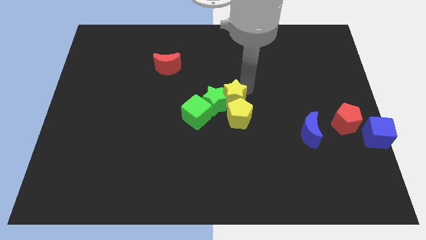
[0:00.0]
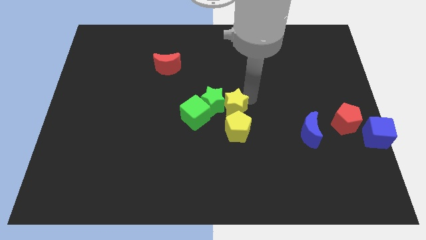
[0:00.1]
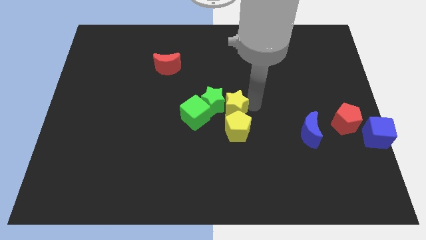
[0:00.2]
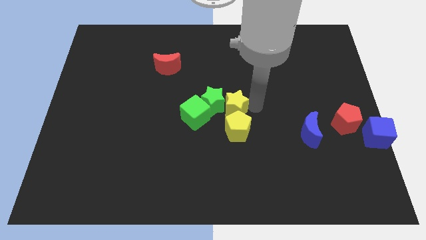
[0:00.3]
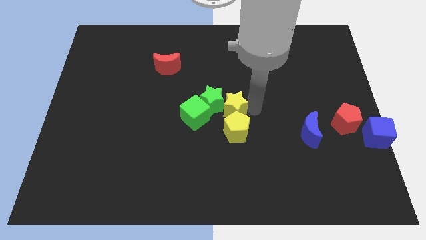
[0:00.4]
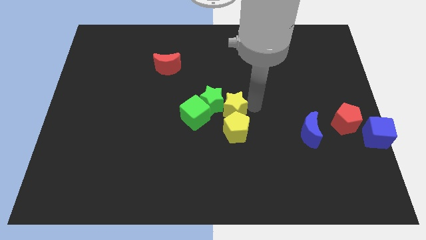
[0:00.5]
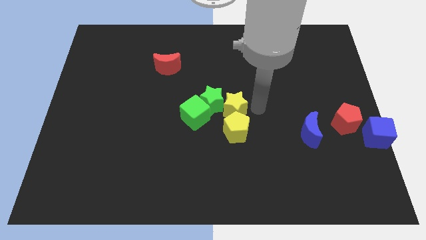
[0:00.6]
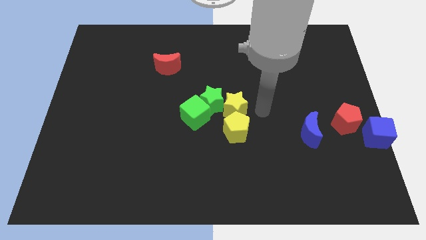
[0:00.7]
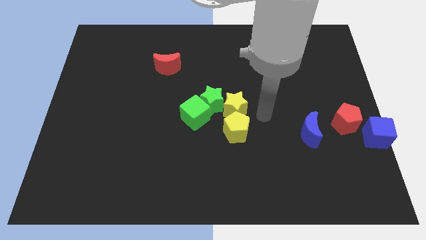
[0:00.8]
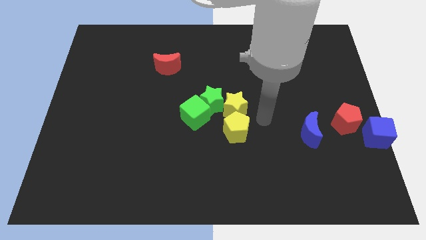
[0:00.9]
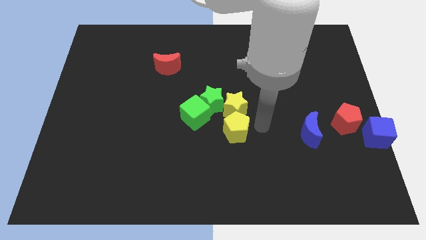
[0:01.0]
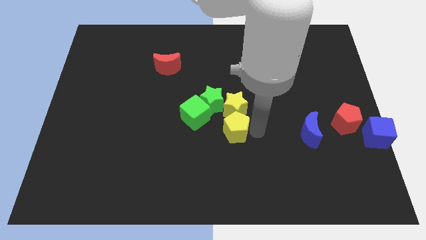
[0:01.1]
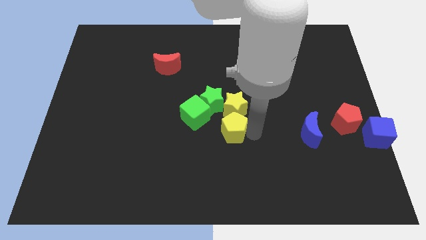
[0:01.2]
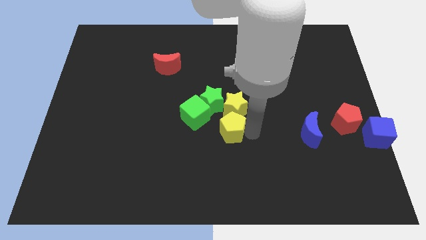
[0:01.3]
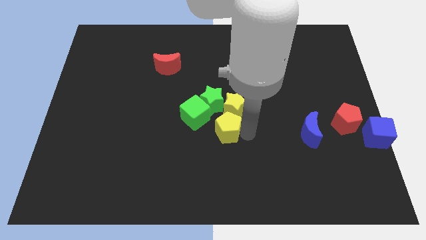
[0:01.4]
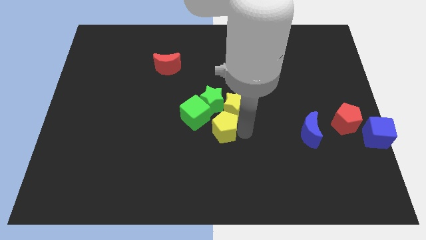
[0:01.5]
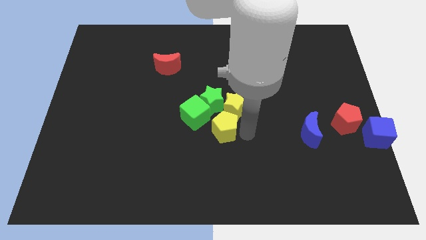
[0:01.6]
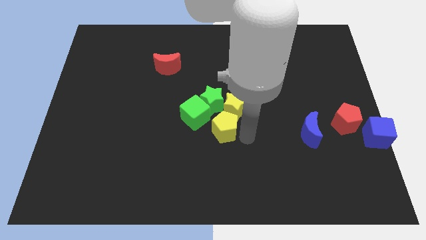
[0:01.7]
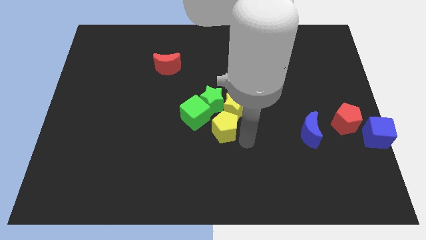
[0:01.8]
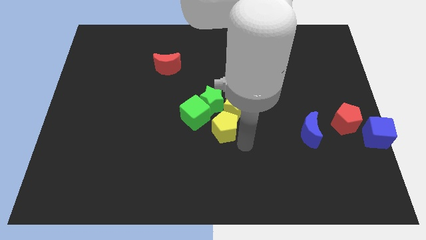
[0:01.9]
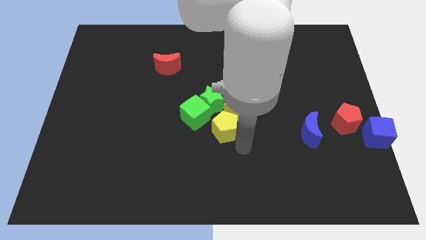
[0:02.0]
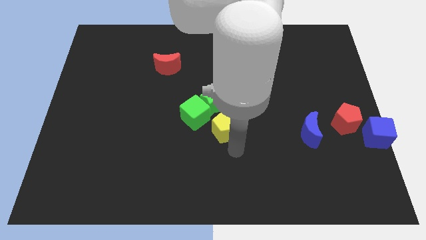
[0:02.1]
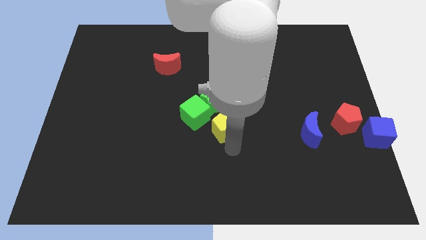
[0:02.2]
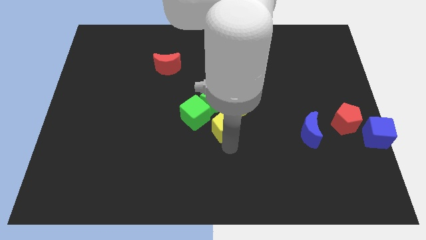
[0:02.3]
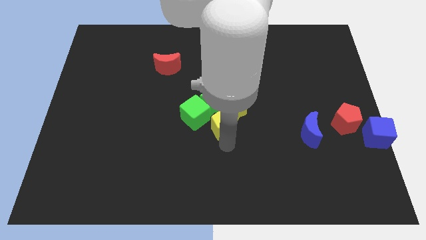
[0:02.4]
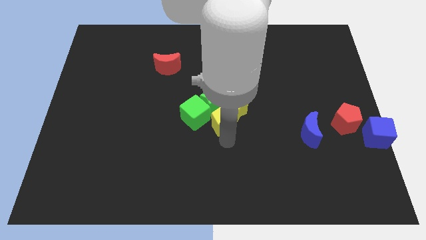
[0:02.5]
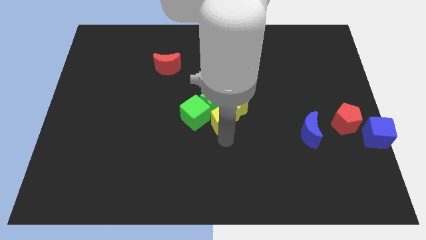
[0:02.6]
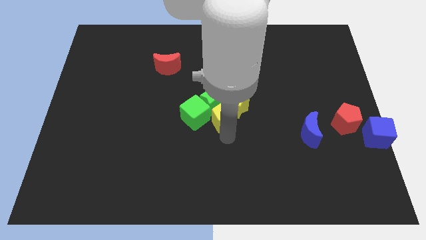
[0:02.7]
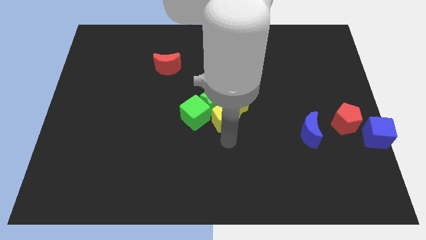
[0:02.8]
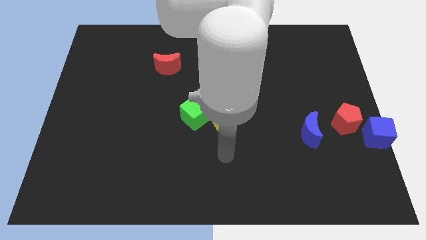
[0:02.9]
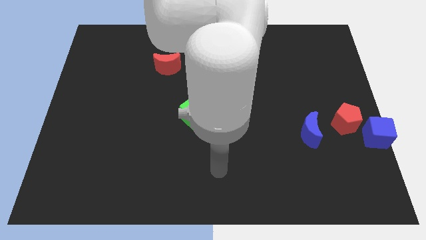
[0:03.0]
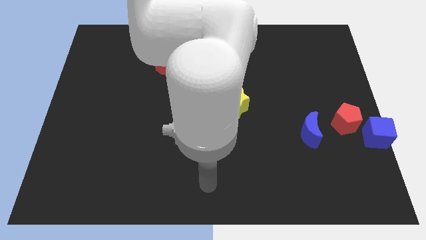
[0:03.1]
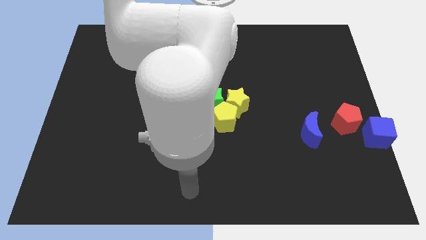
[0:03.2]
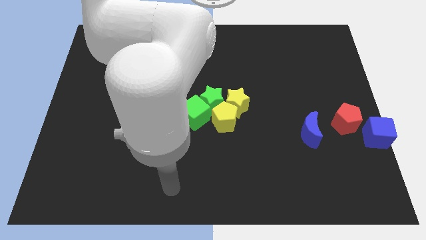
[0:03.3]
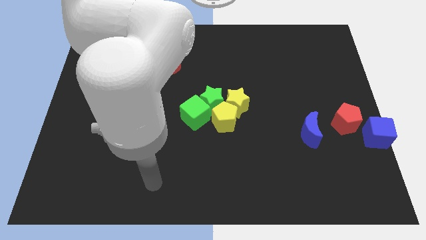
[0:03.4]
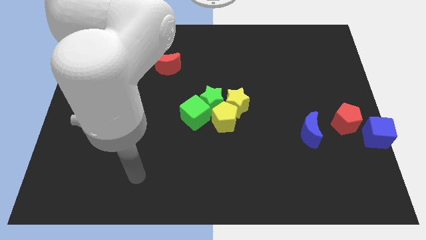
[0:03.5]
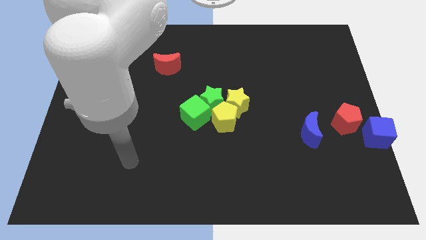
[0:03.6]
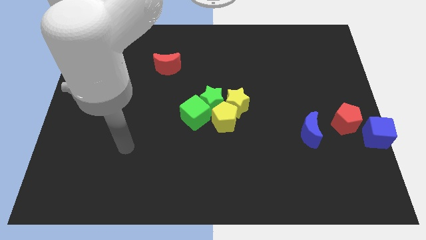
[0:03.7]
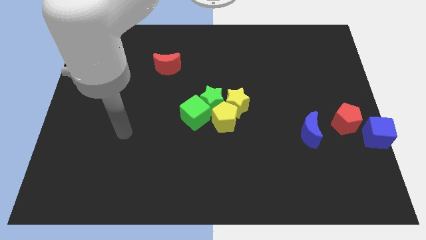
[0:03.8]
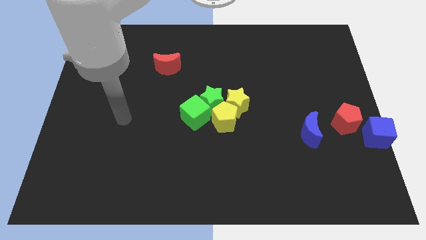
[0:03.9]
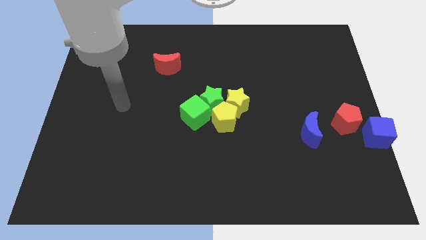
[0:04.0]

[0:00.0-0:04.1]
place yellow pentagon and yellow star at the center

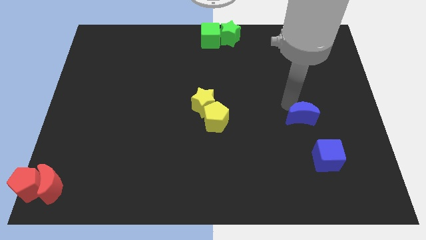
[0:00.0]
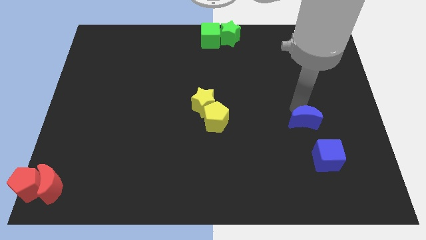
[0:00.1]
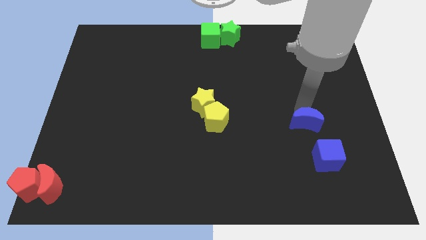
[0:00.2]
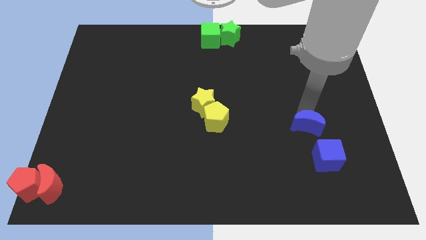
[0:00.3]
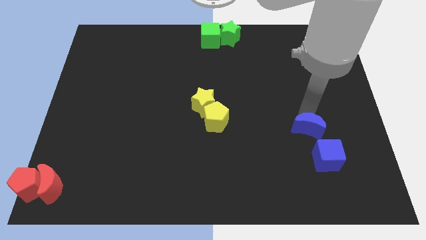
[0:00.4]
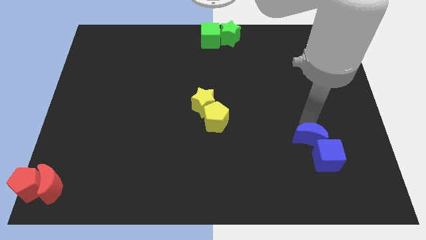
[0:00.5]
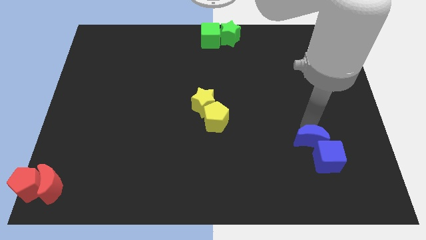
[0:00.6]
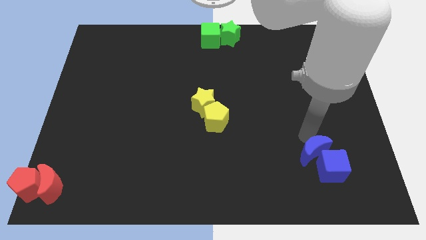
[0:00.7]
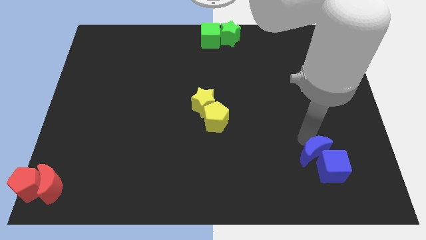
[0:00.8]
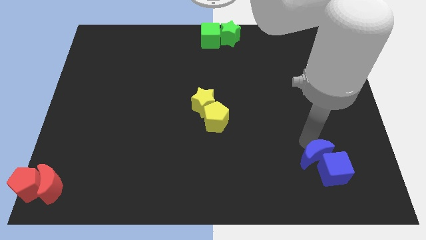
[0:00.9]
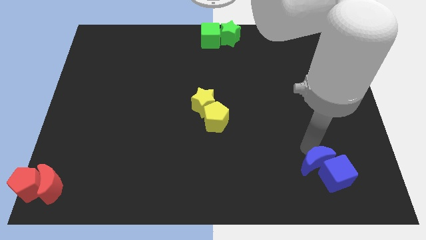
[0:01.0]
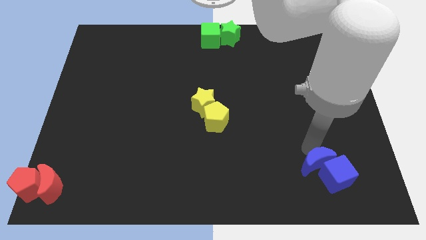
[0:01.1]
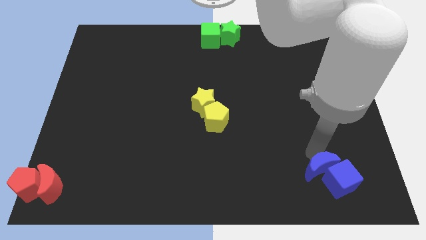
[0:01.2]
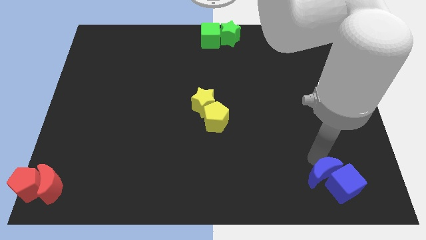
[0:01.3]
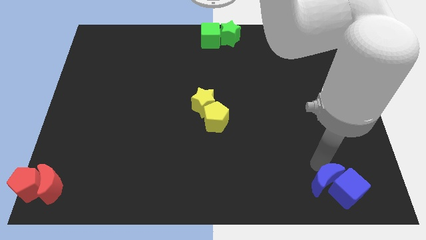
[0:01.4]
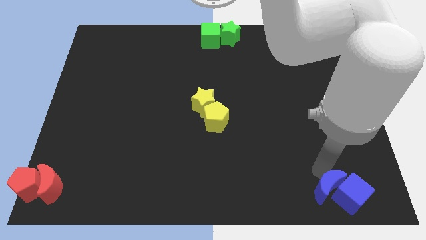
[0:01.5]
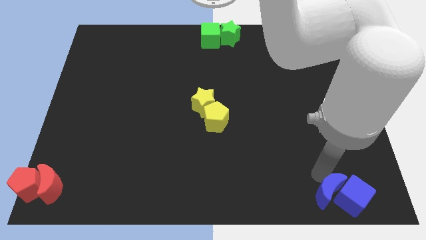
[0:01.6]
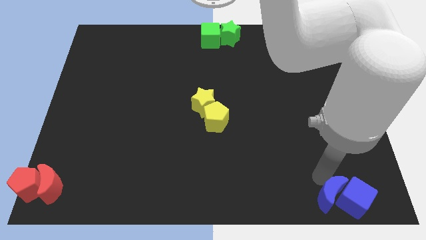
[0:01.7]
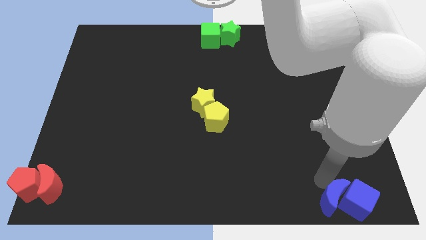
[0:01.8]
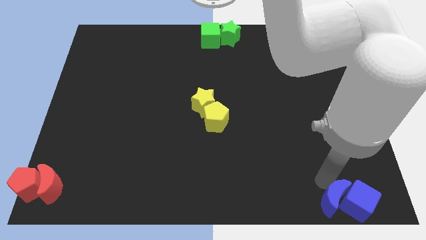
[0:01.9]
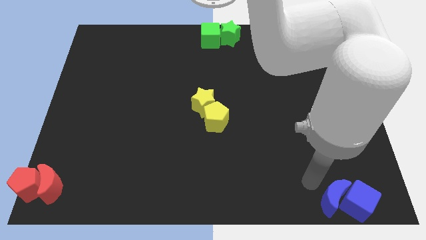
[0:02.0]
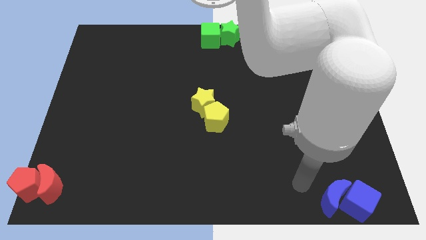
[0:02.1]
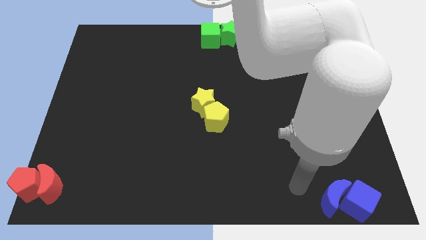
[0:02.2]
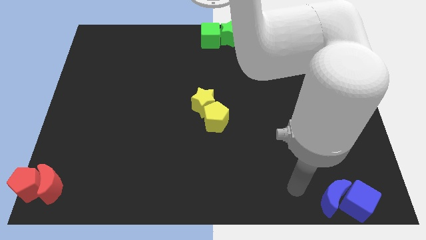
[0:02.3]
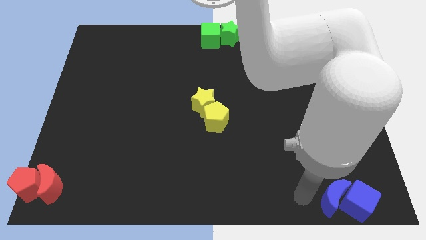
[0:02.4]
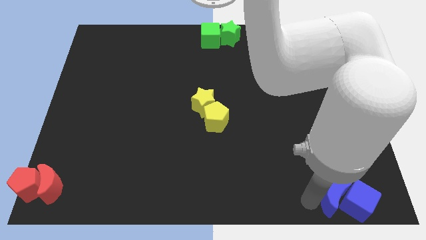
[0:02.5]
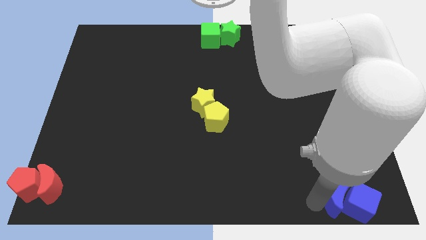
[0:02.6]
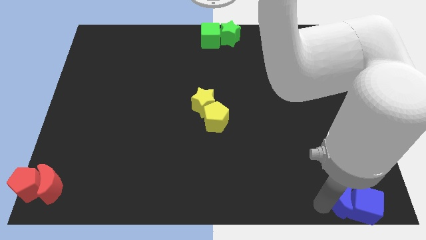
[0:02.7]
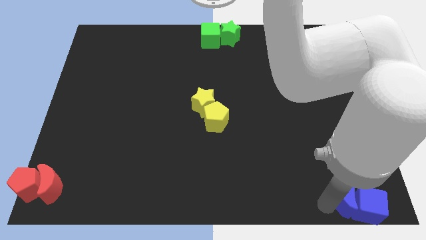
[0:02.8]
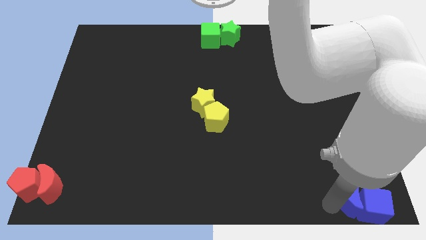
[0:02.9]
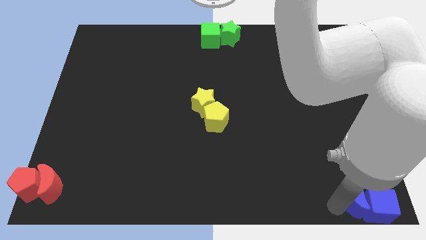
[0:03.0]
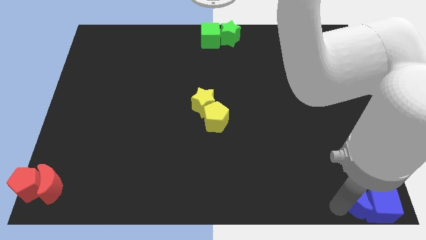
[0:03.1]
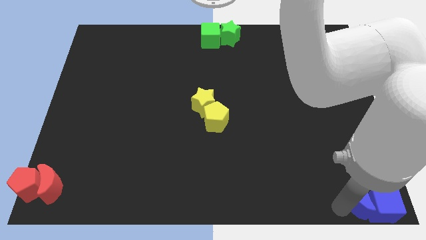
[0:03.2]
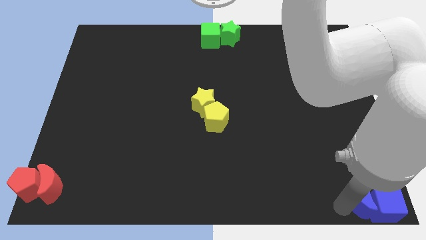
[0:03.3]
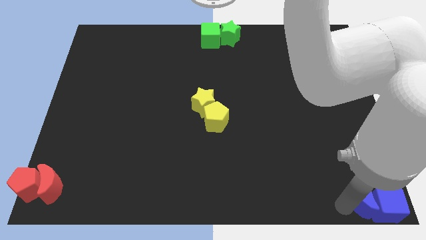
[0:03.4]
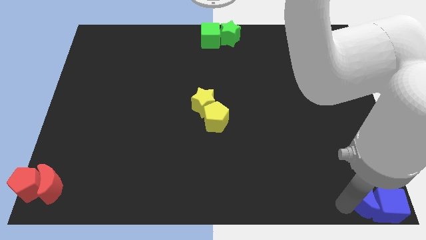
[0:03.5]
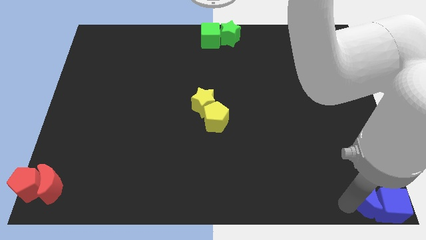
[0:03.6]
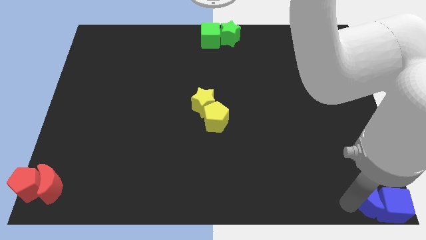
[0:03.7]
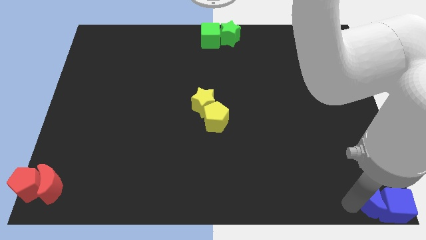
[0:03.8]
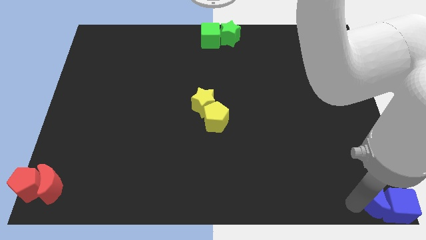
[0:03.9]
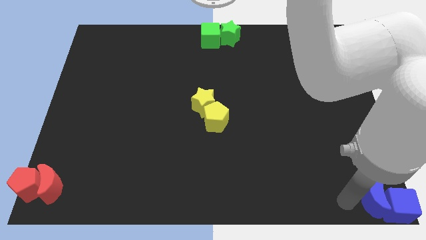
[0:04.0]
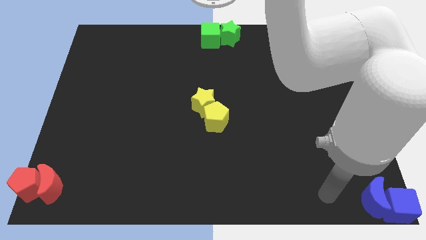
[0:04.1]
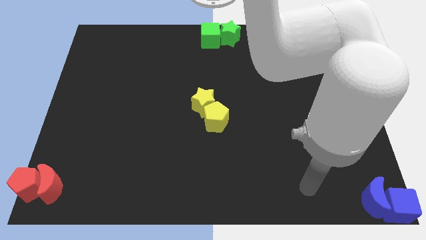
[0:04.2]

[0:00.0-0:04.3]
push the blue cube to the bottom right corner

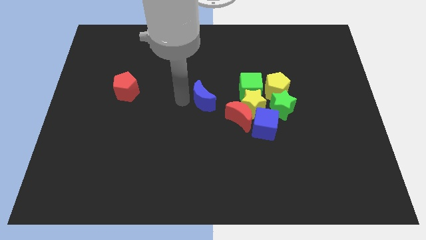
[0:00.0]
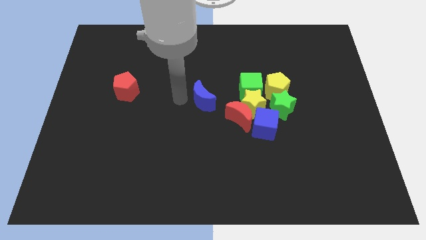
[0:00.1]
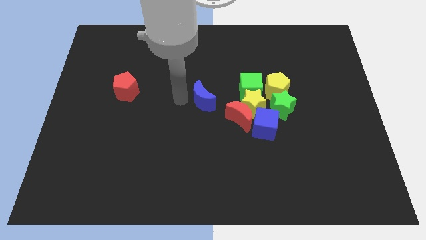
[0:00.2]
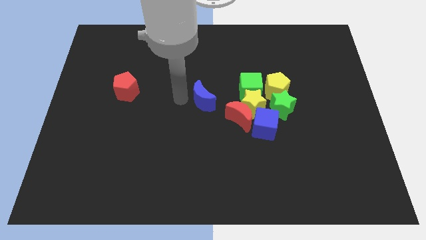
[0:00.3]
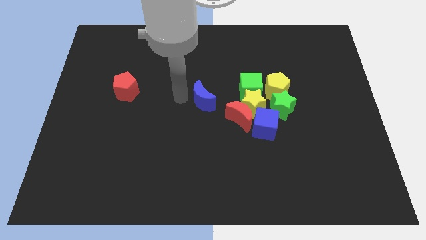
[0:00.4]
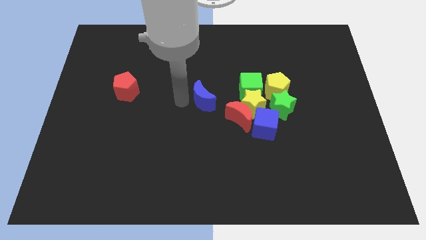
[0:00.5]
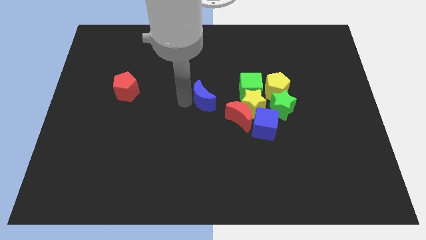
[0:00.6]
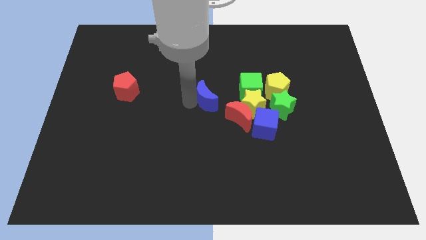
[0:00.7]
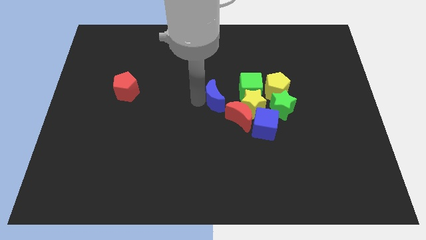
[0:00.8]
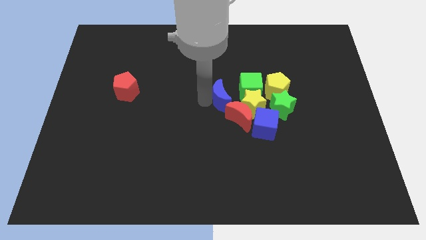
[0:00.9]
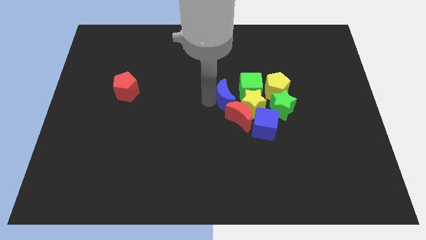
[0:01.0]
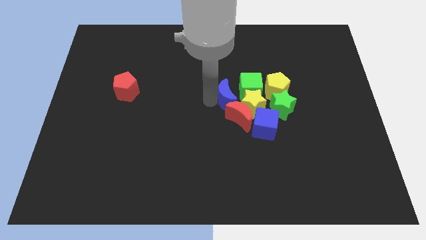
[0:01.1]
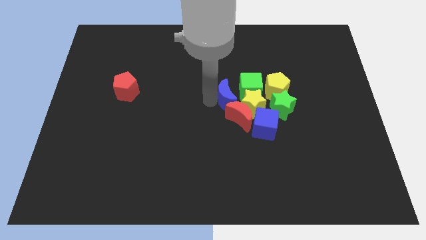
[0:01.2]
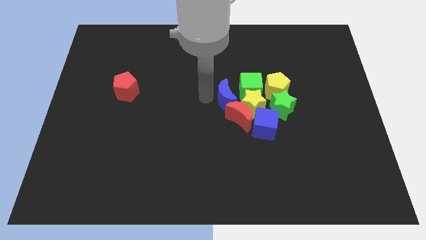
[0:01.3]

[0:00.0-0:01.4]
put blue moon above red moon
